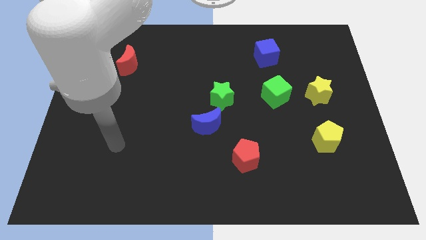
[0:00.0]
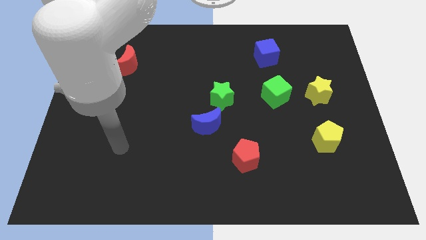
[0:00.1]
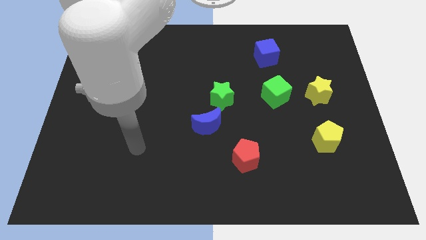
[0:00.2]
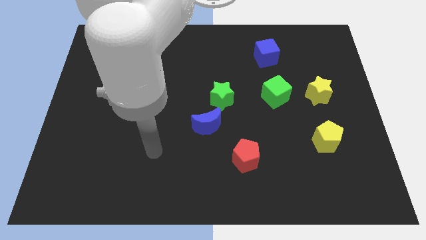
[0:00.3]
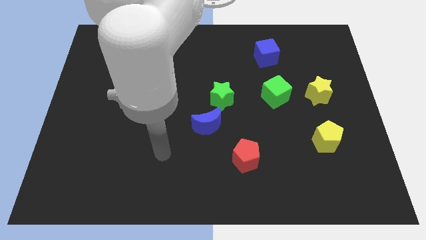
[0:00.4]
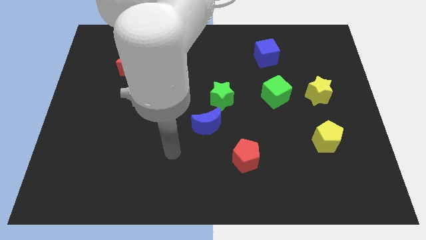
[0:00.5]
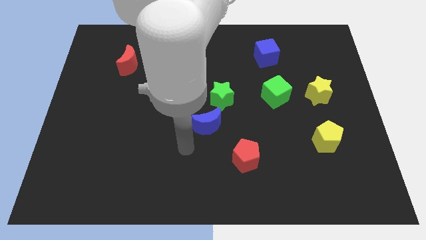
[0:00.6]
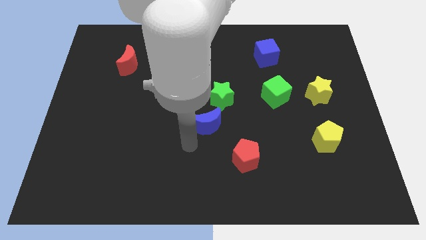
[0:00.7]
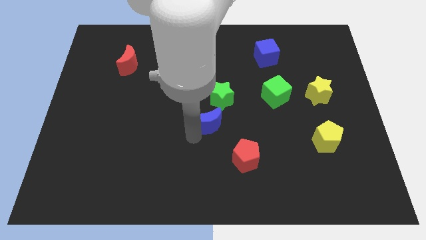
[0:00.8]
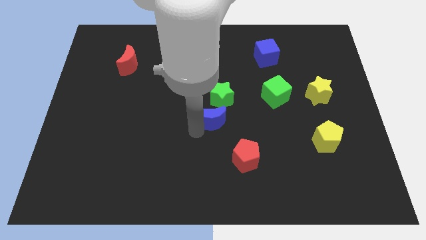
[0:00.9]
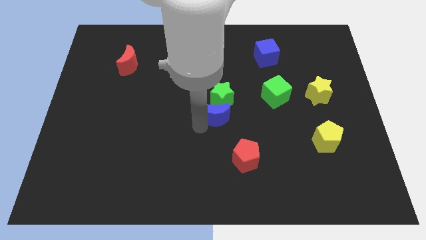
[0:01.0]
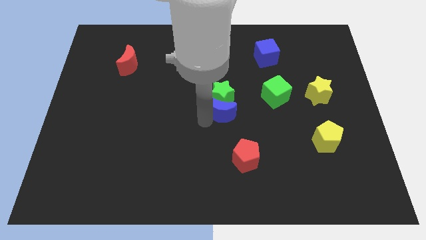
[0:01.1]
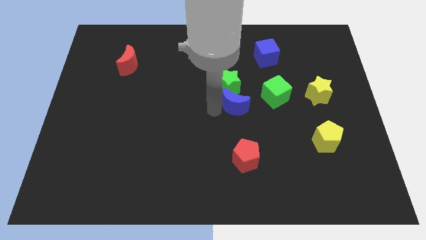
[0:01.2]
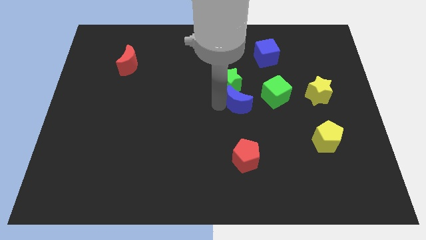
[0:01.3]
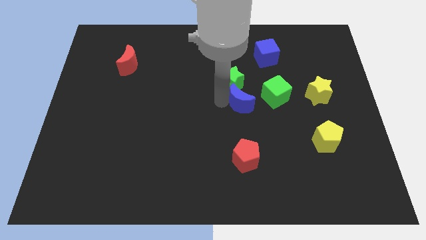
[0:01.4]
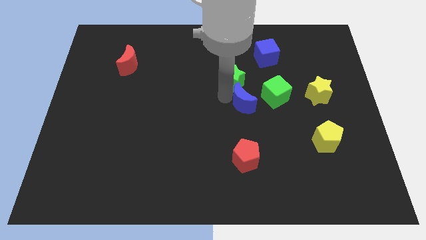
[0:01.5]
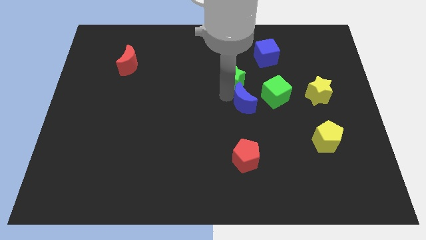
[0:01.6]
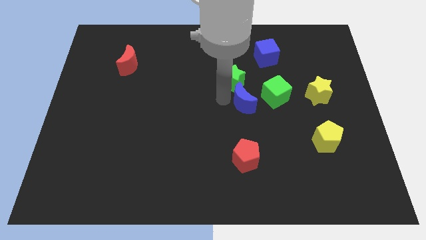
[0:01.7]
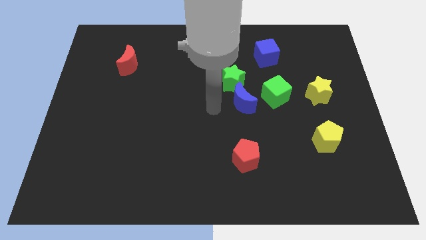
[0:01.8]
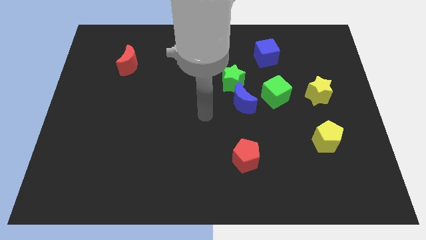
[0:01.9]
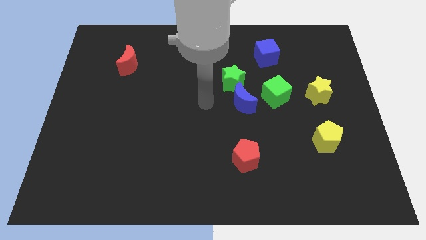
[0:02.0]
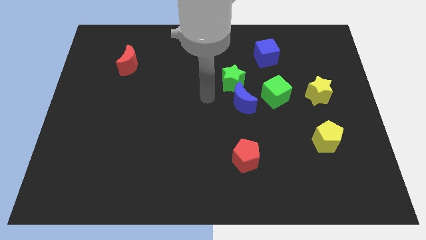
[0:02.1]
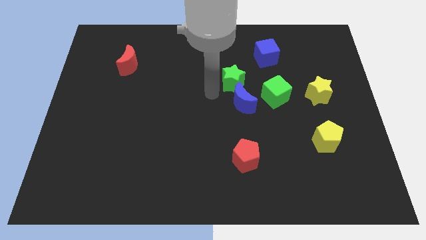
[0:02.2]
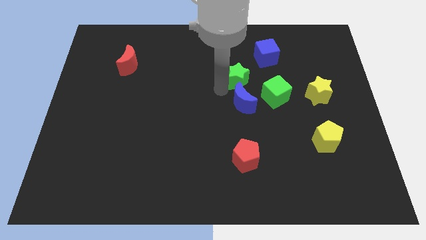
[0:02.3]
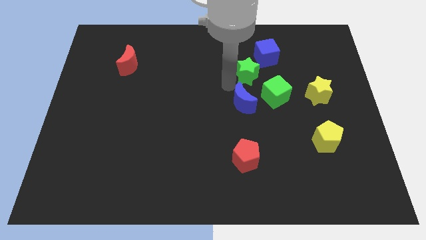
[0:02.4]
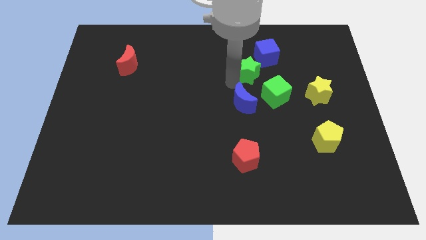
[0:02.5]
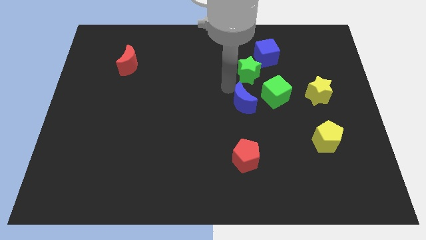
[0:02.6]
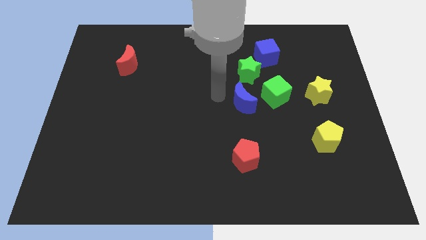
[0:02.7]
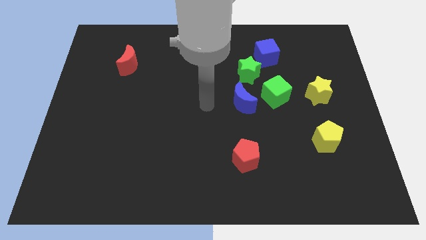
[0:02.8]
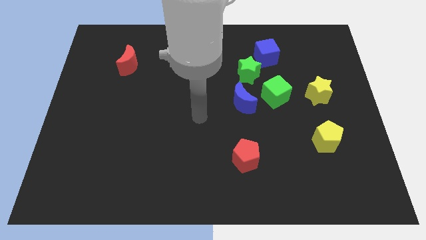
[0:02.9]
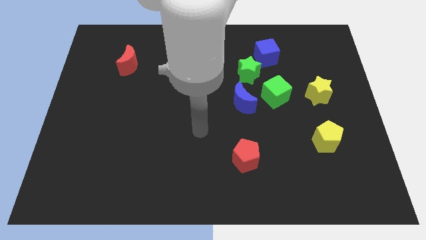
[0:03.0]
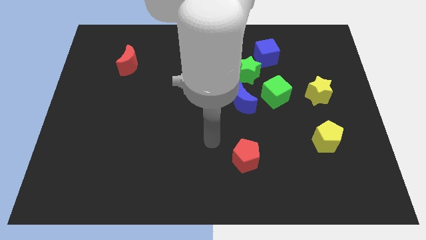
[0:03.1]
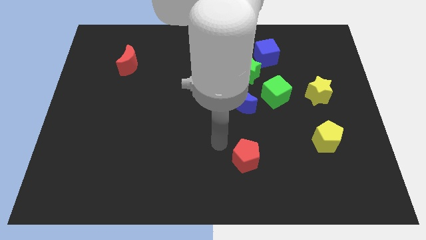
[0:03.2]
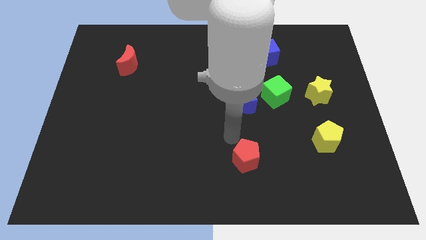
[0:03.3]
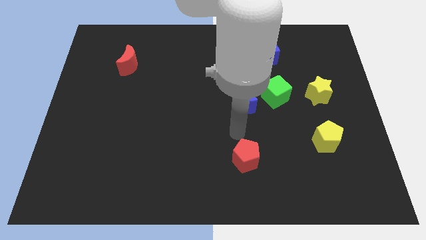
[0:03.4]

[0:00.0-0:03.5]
place the green star in between the blue cube and blue crescent

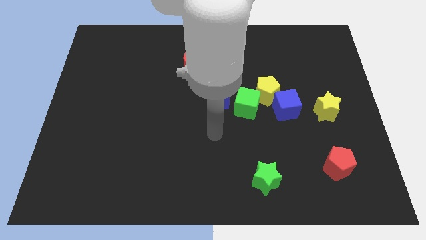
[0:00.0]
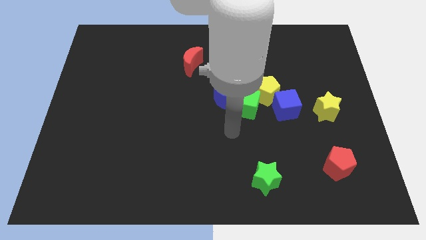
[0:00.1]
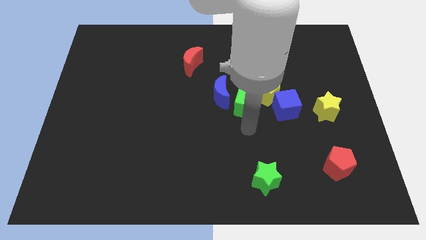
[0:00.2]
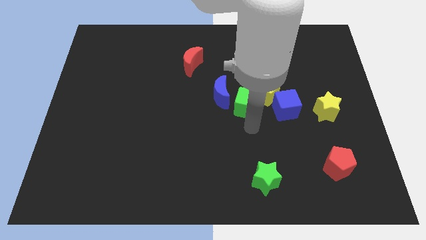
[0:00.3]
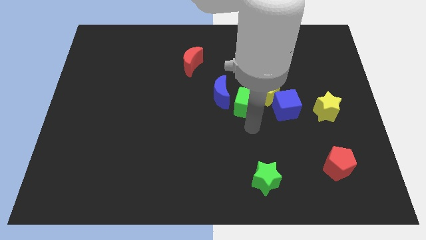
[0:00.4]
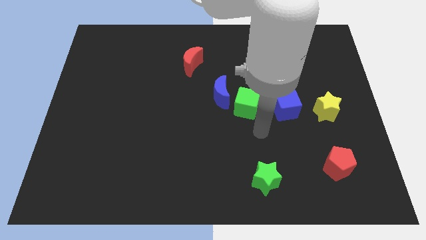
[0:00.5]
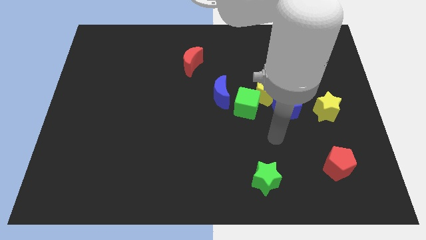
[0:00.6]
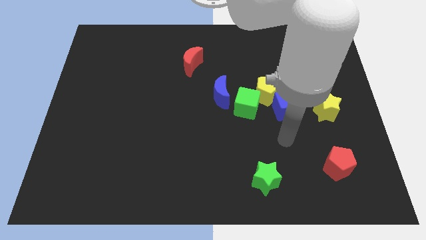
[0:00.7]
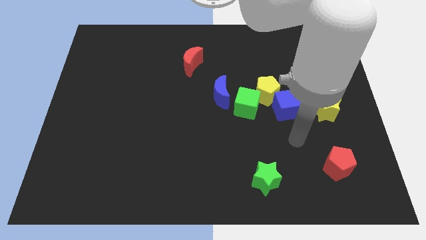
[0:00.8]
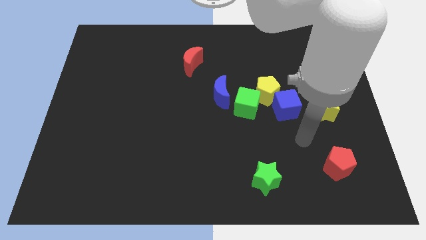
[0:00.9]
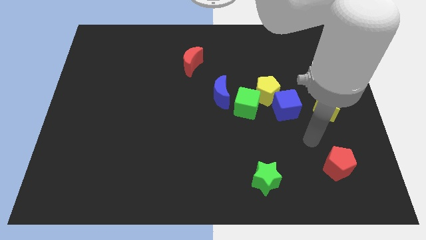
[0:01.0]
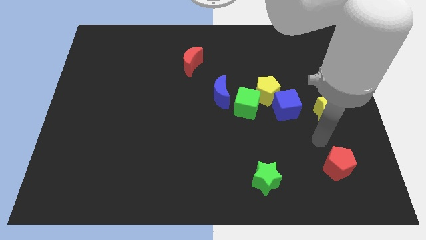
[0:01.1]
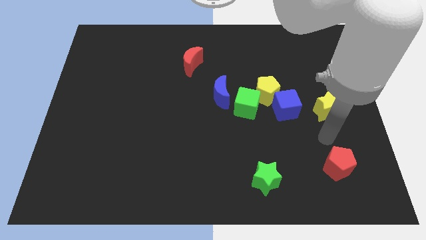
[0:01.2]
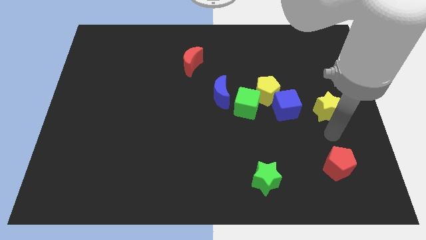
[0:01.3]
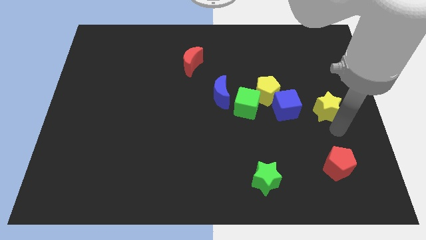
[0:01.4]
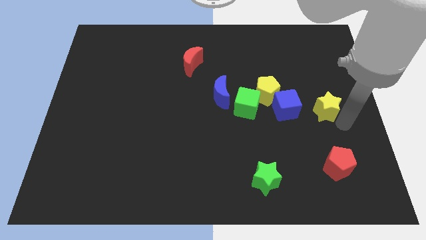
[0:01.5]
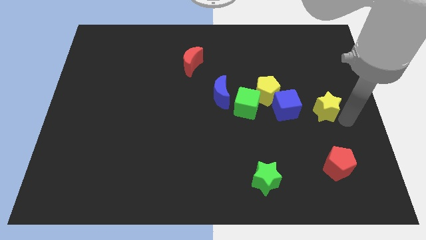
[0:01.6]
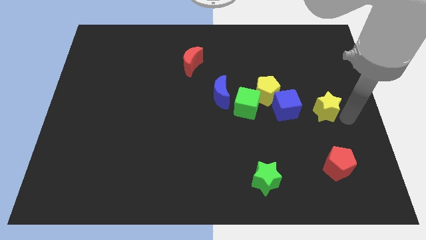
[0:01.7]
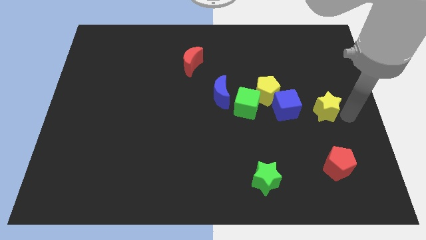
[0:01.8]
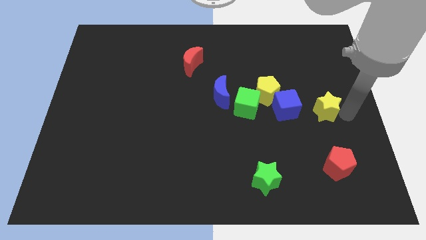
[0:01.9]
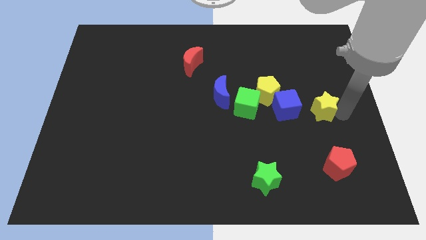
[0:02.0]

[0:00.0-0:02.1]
place your arm at the right of the star

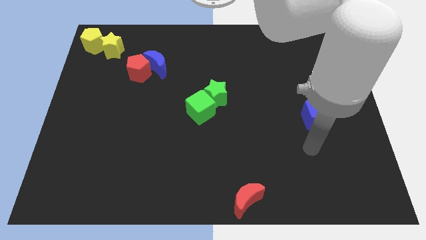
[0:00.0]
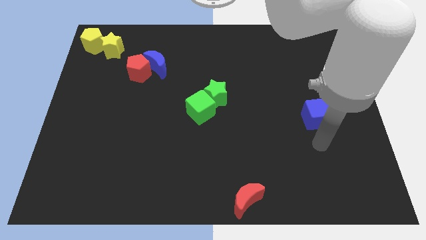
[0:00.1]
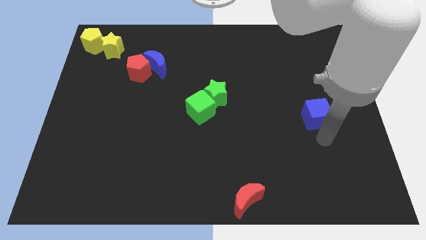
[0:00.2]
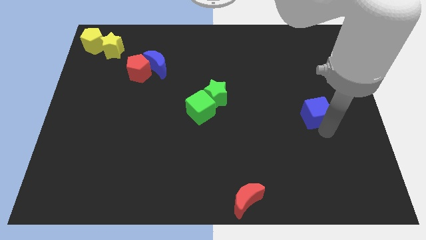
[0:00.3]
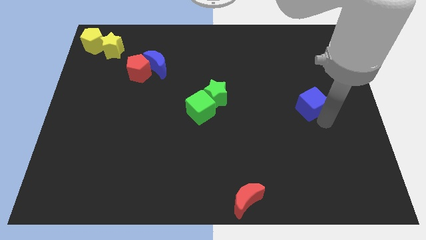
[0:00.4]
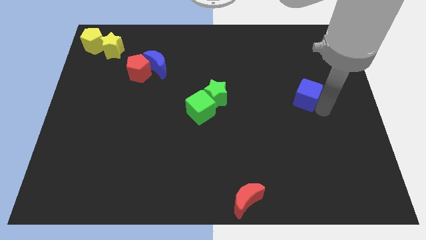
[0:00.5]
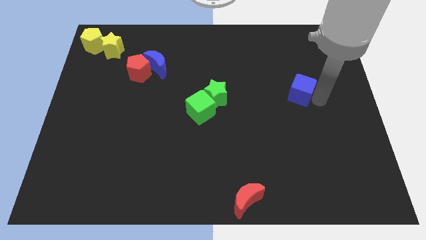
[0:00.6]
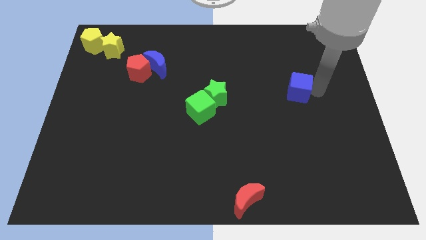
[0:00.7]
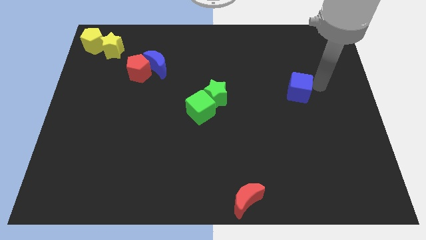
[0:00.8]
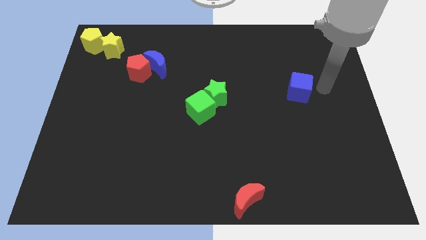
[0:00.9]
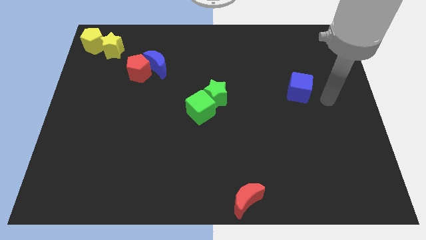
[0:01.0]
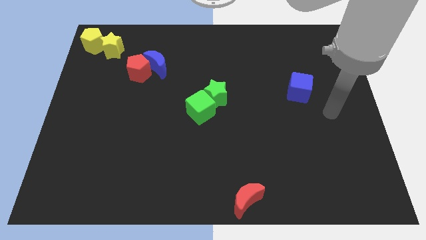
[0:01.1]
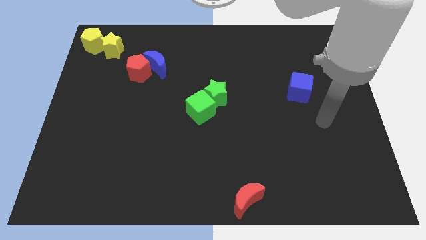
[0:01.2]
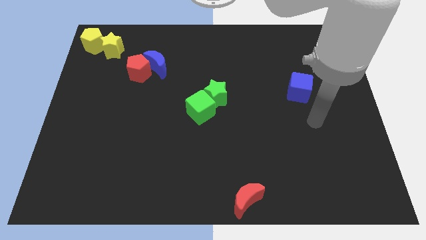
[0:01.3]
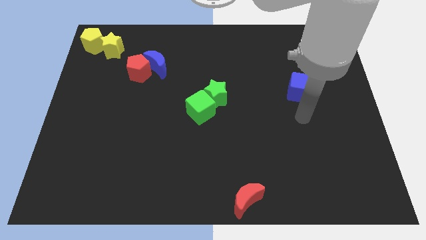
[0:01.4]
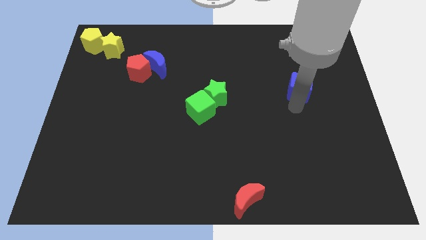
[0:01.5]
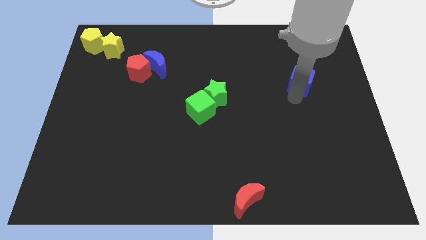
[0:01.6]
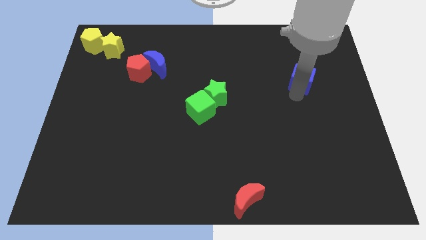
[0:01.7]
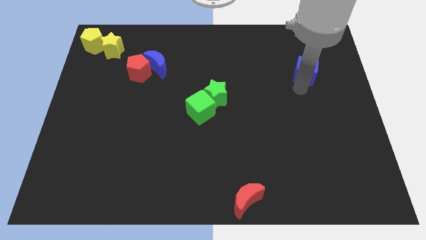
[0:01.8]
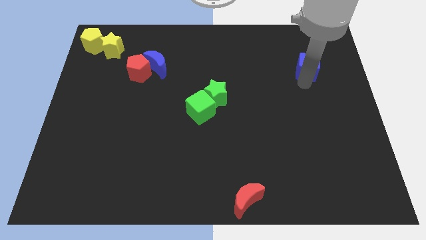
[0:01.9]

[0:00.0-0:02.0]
slide blue cube towards the top side

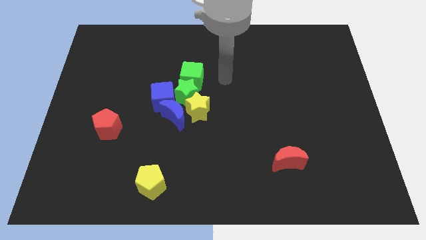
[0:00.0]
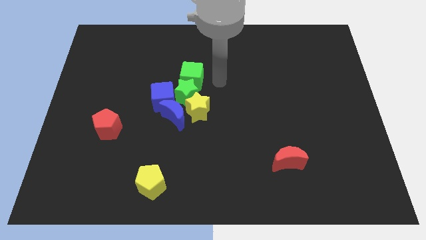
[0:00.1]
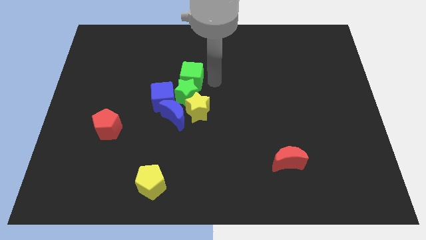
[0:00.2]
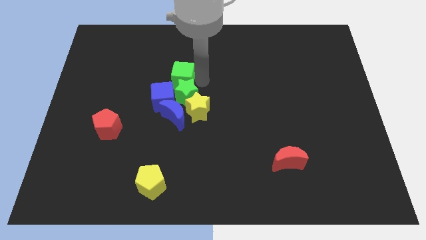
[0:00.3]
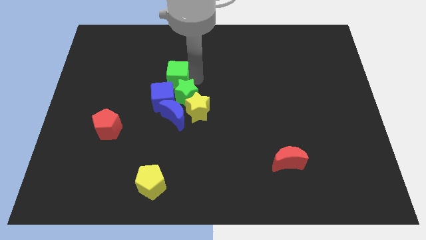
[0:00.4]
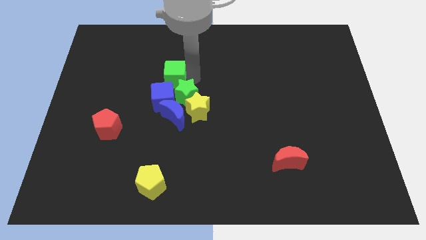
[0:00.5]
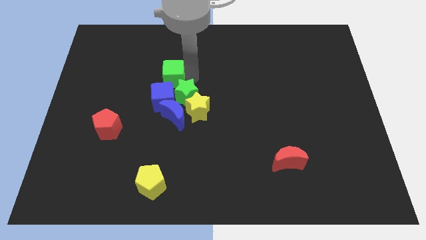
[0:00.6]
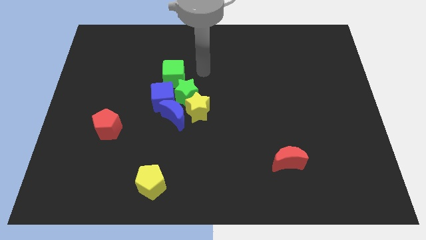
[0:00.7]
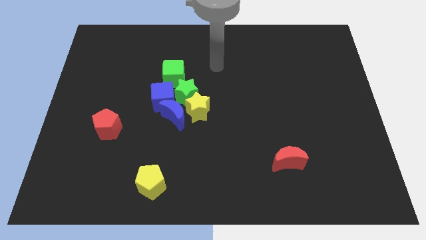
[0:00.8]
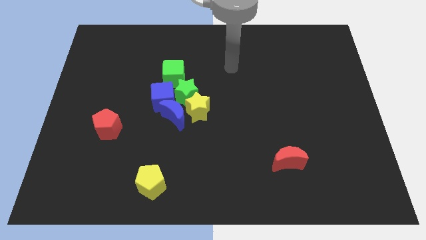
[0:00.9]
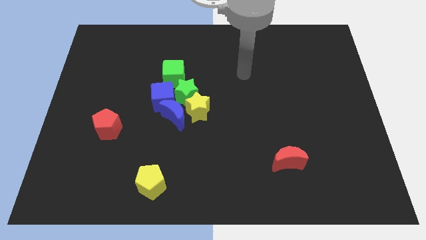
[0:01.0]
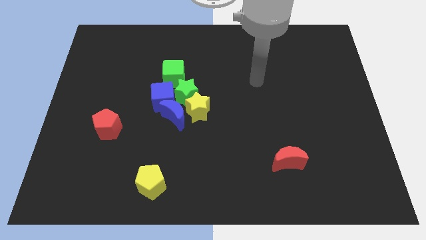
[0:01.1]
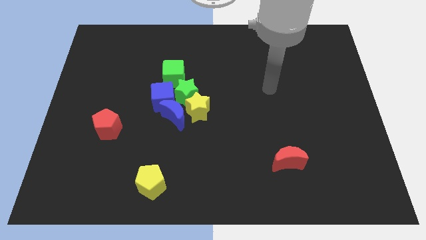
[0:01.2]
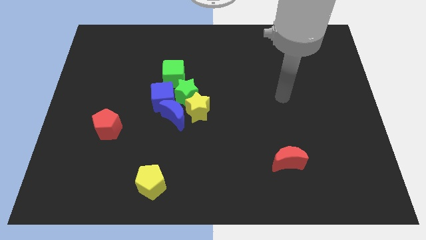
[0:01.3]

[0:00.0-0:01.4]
place the green cube to the top right of blue cube
